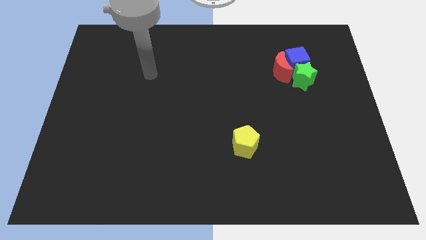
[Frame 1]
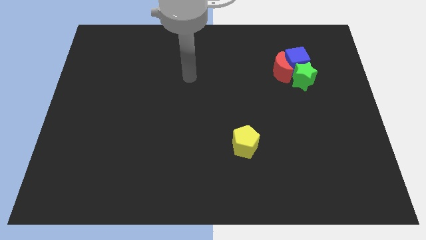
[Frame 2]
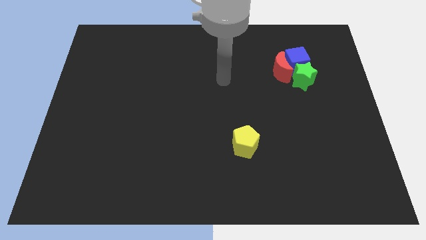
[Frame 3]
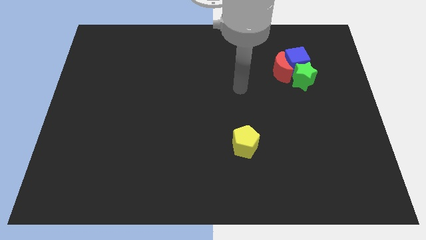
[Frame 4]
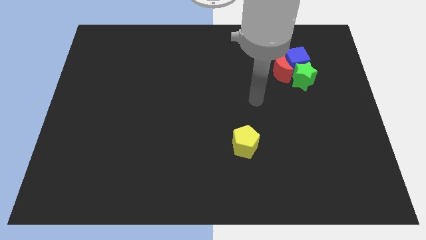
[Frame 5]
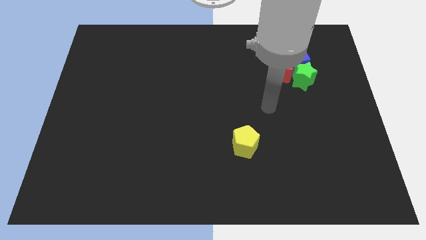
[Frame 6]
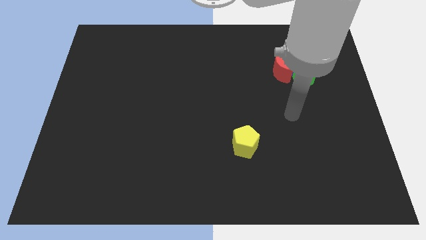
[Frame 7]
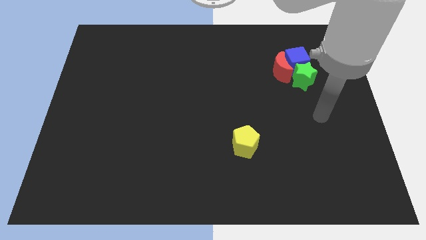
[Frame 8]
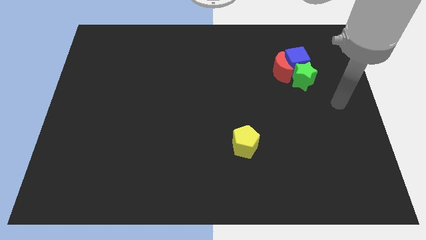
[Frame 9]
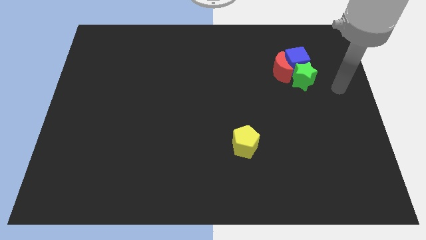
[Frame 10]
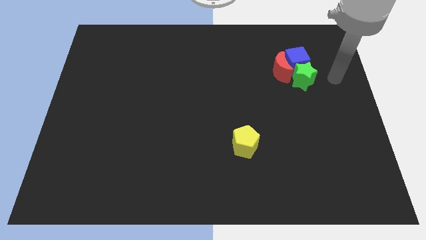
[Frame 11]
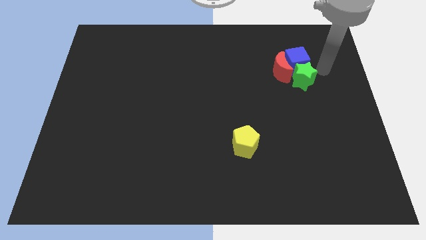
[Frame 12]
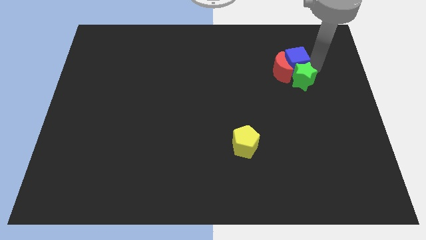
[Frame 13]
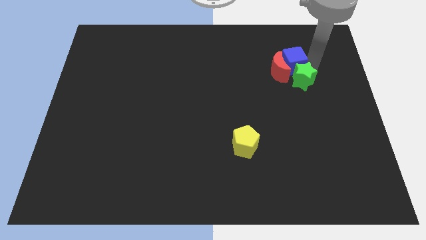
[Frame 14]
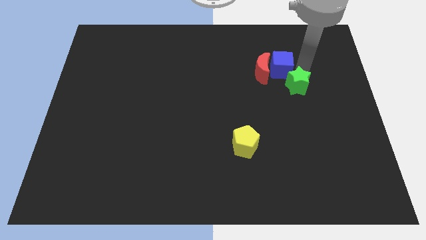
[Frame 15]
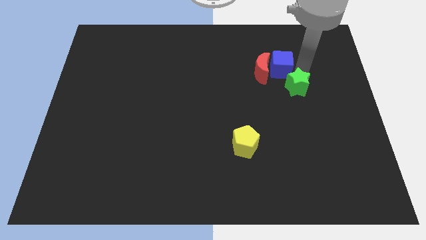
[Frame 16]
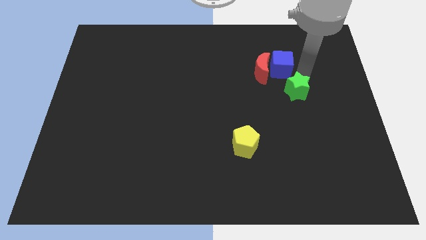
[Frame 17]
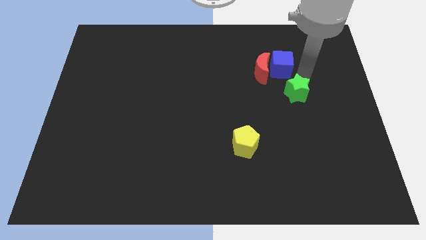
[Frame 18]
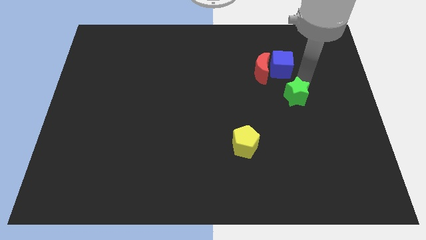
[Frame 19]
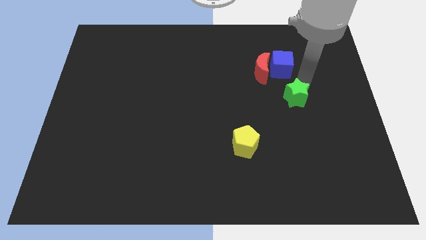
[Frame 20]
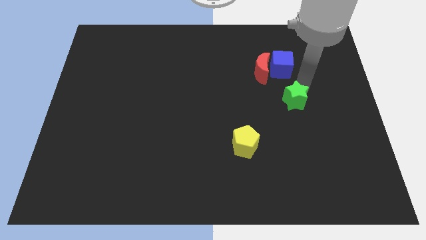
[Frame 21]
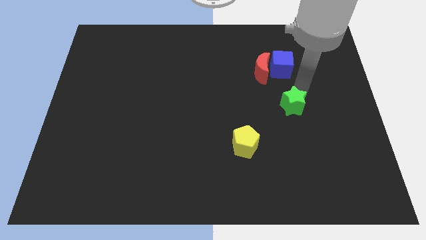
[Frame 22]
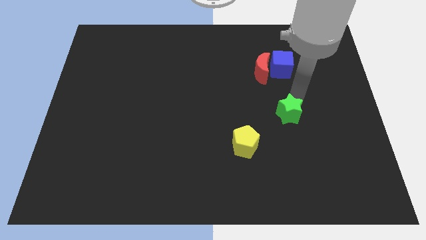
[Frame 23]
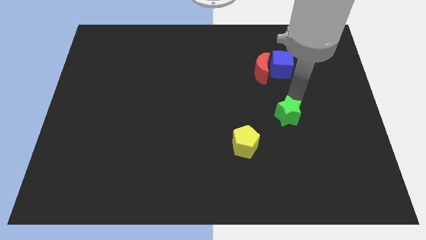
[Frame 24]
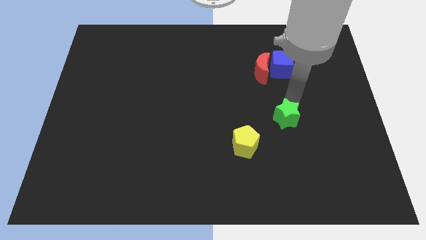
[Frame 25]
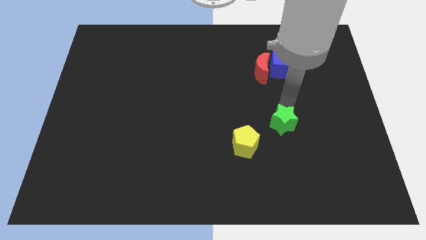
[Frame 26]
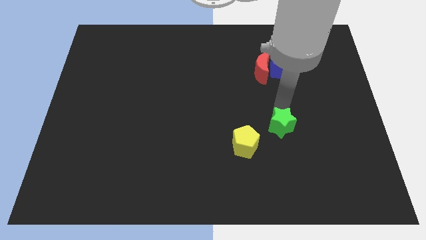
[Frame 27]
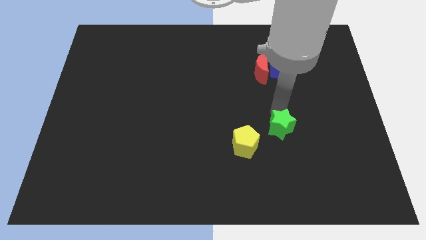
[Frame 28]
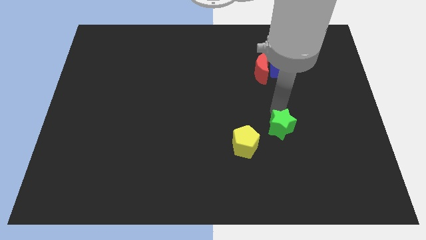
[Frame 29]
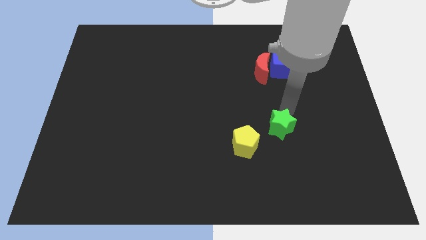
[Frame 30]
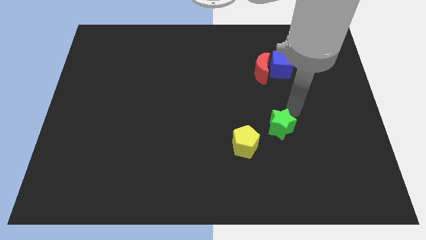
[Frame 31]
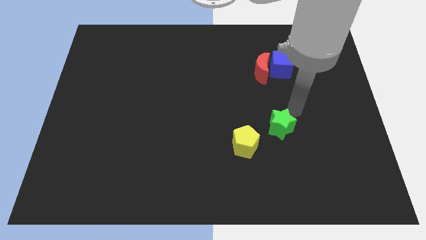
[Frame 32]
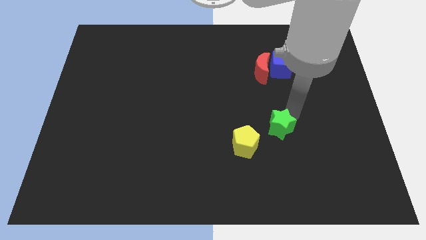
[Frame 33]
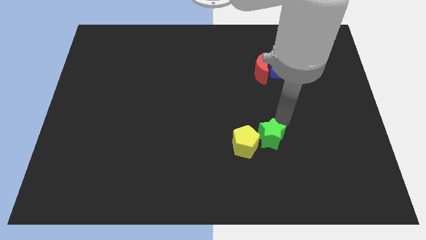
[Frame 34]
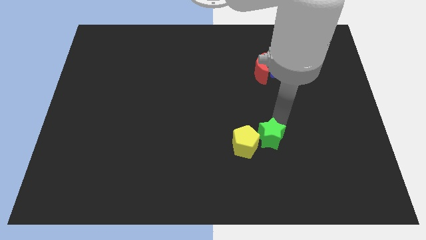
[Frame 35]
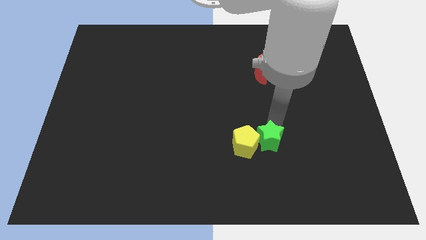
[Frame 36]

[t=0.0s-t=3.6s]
push the green star to the pentagon

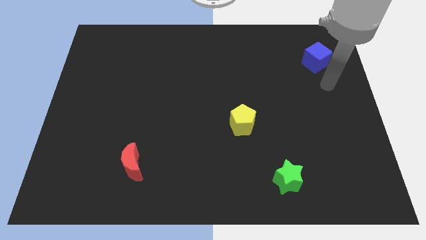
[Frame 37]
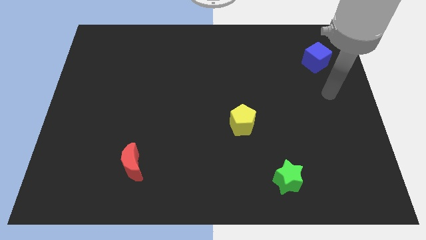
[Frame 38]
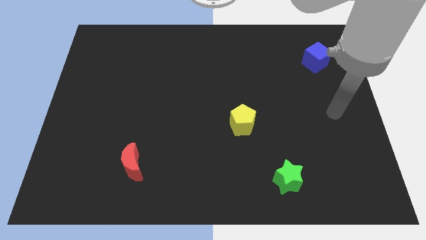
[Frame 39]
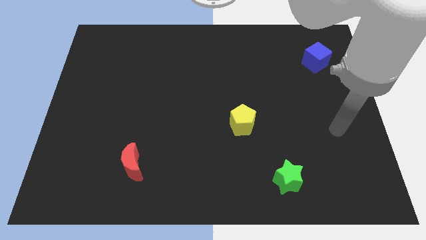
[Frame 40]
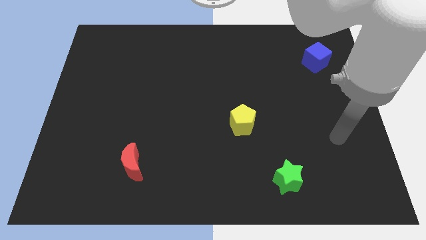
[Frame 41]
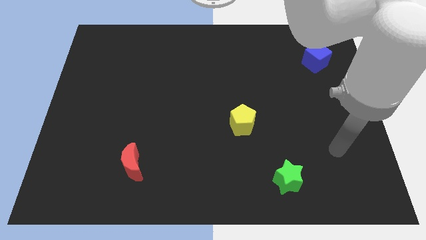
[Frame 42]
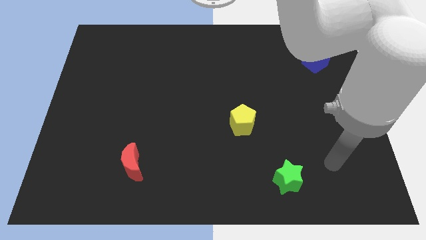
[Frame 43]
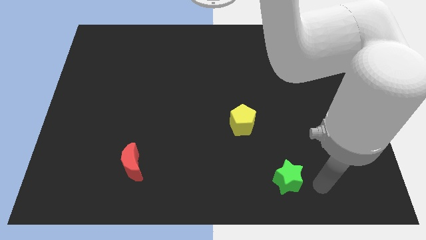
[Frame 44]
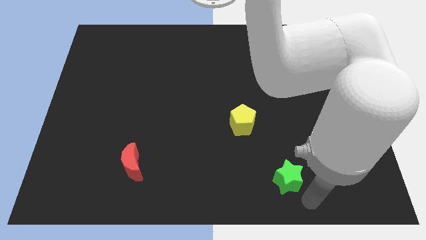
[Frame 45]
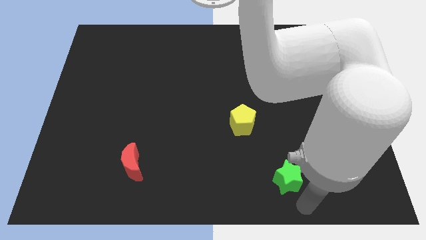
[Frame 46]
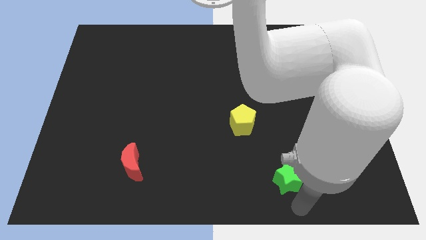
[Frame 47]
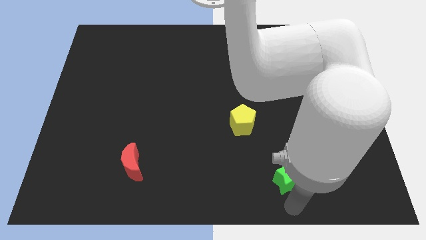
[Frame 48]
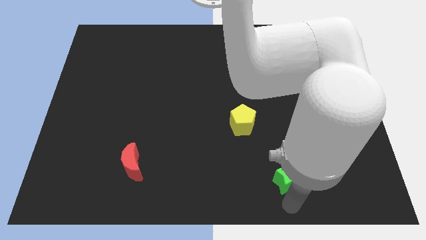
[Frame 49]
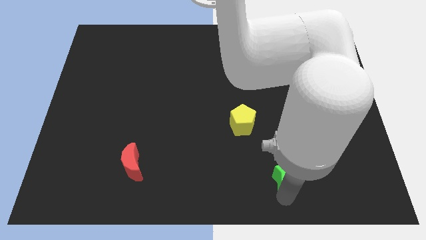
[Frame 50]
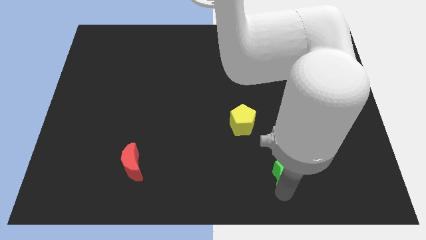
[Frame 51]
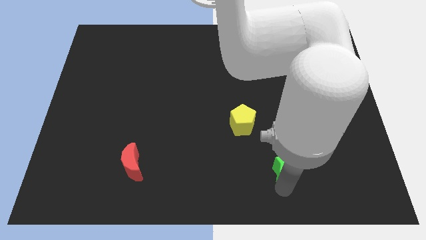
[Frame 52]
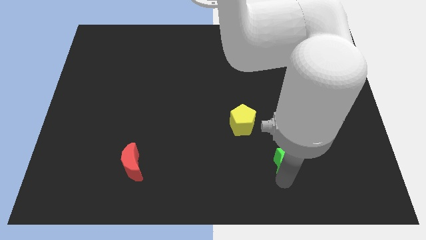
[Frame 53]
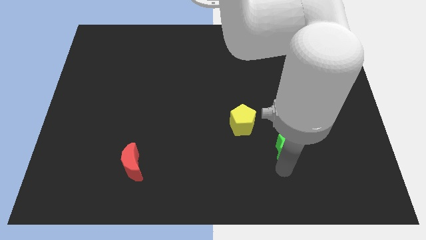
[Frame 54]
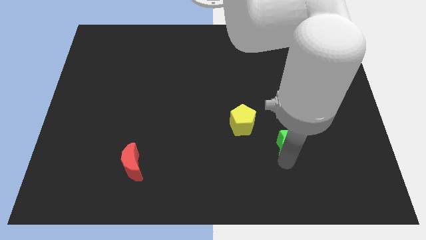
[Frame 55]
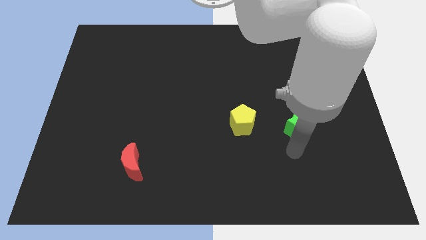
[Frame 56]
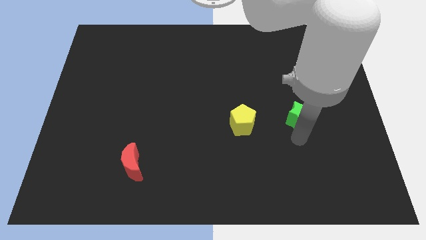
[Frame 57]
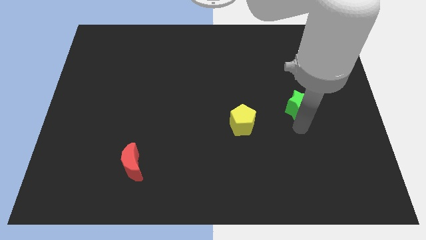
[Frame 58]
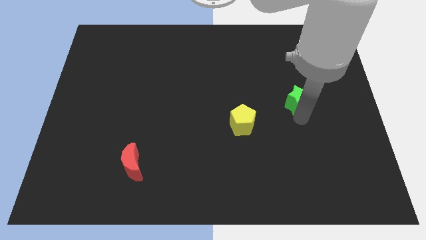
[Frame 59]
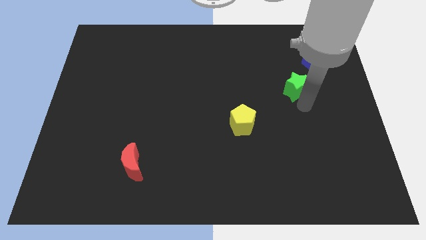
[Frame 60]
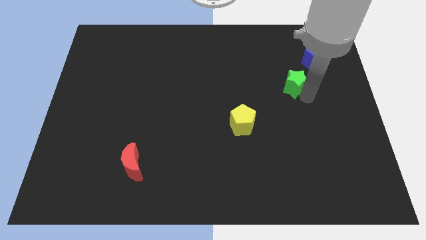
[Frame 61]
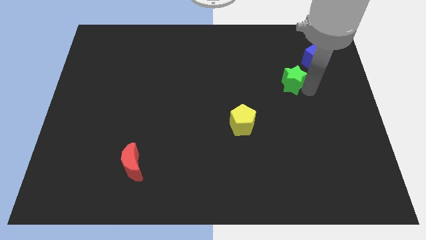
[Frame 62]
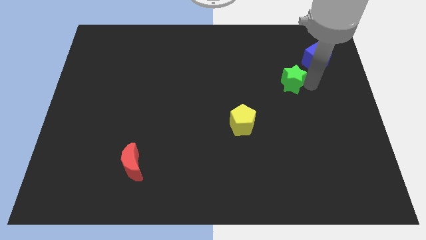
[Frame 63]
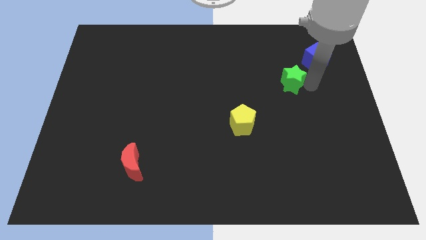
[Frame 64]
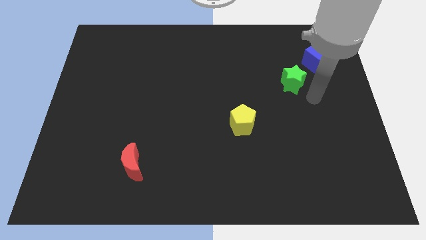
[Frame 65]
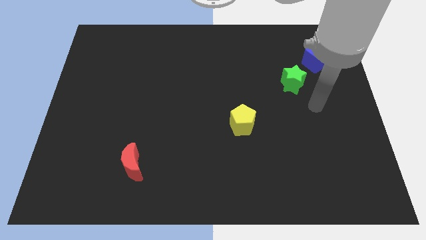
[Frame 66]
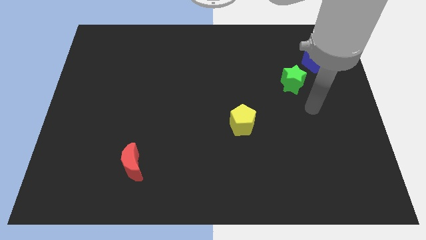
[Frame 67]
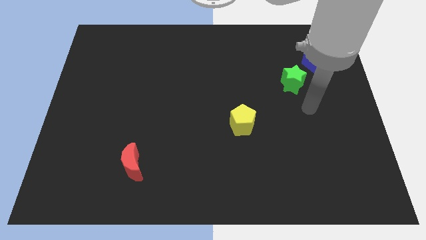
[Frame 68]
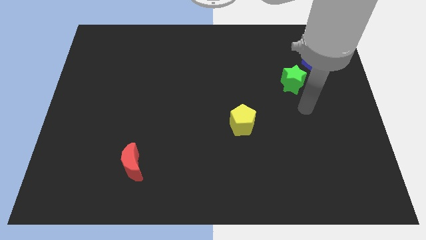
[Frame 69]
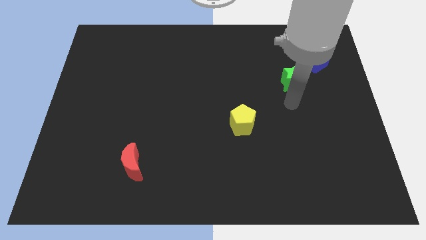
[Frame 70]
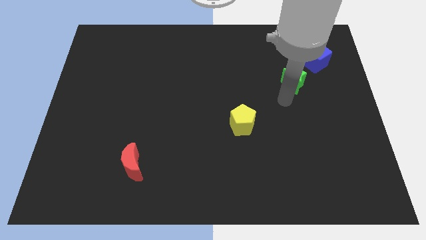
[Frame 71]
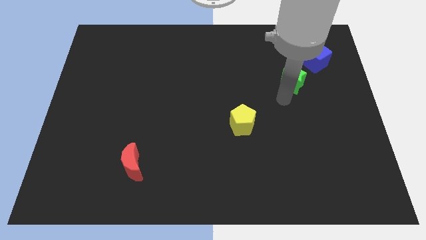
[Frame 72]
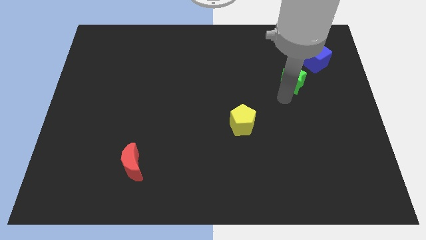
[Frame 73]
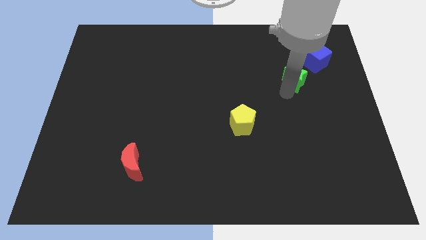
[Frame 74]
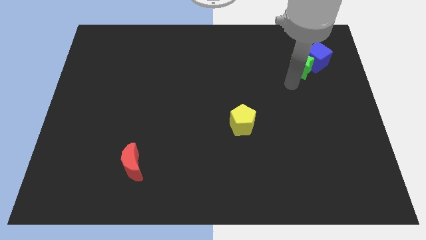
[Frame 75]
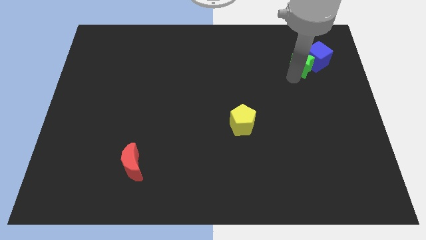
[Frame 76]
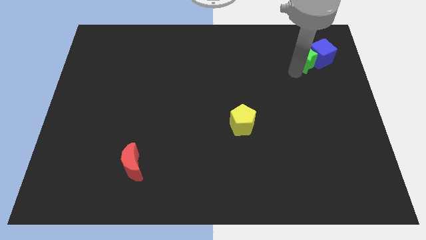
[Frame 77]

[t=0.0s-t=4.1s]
slide the star next to the cube

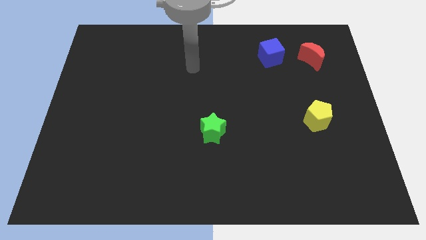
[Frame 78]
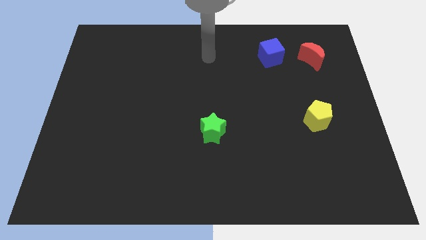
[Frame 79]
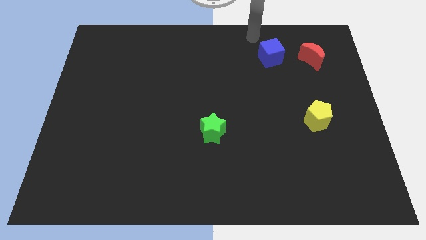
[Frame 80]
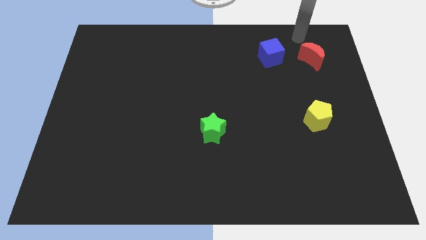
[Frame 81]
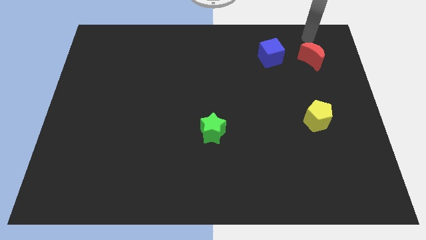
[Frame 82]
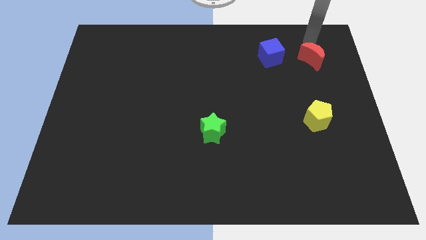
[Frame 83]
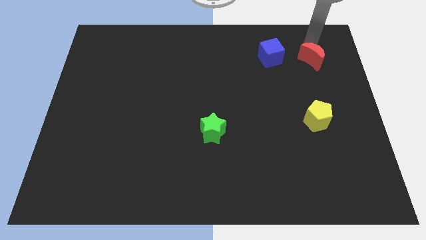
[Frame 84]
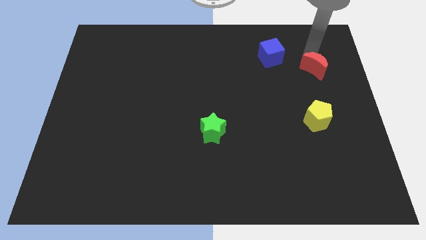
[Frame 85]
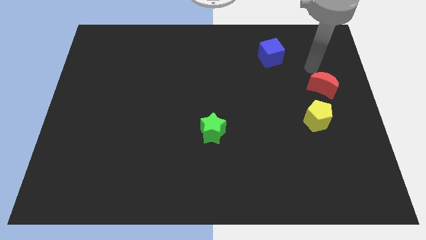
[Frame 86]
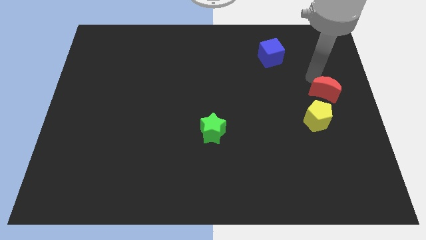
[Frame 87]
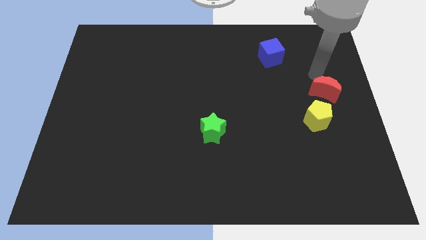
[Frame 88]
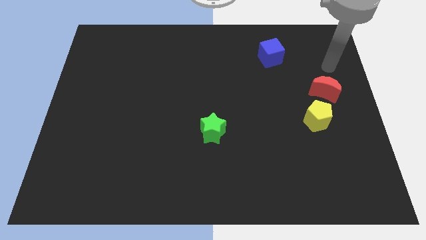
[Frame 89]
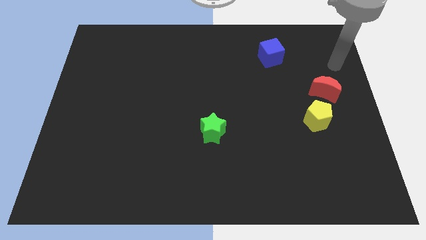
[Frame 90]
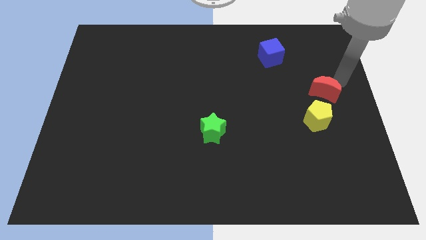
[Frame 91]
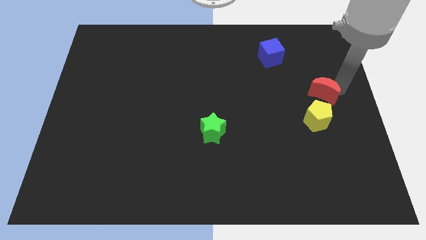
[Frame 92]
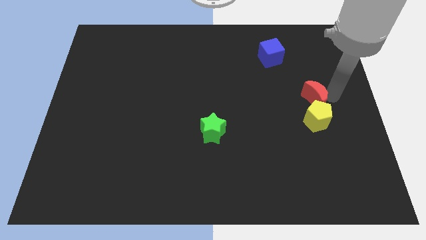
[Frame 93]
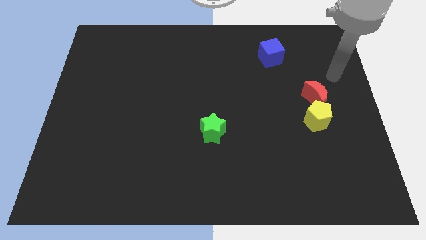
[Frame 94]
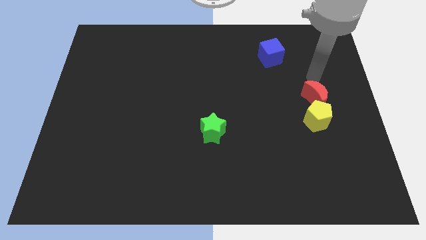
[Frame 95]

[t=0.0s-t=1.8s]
slide the red block to the yellow pentagon
